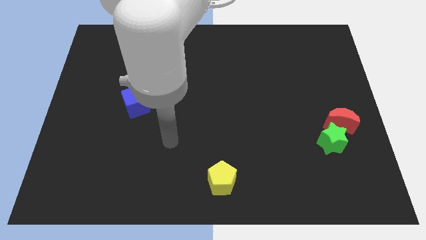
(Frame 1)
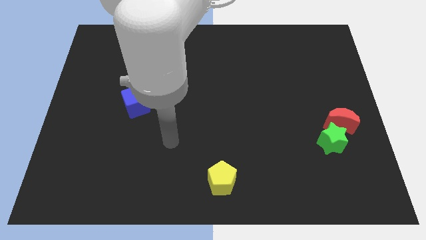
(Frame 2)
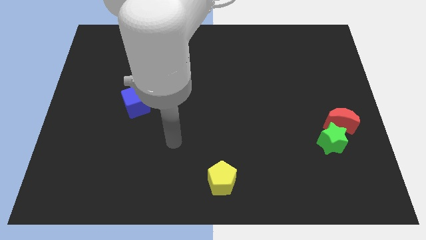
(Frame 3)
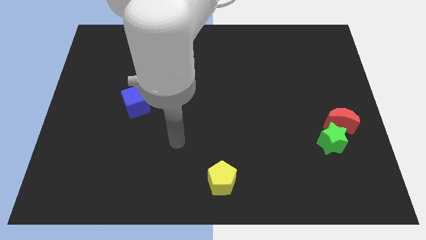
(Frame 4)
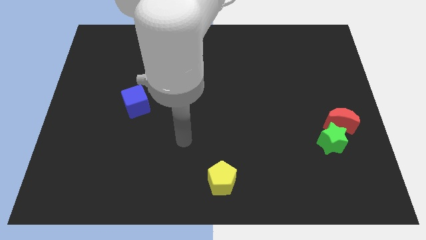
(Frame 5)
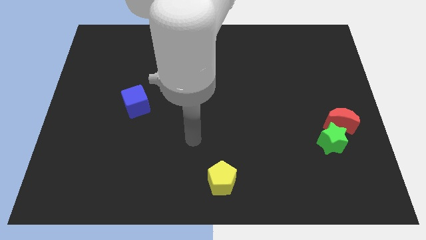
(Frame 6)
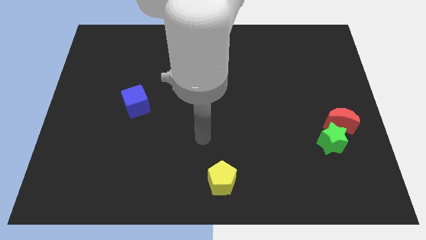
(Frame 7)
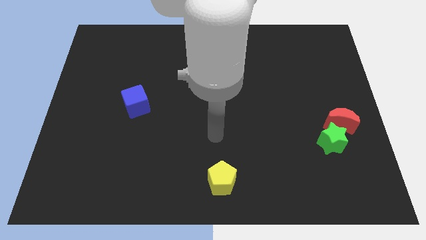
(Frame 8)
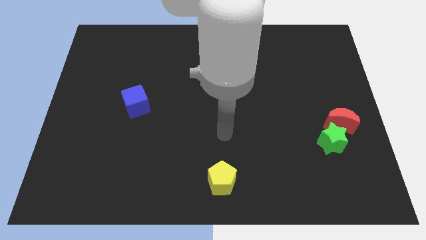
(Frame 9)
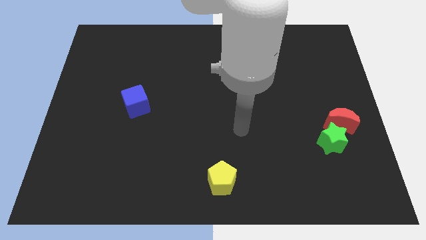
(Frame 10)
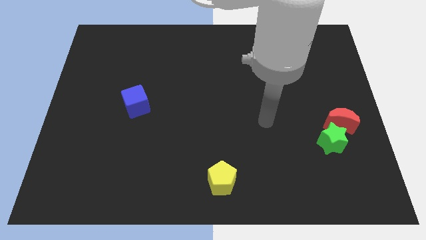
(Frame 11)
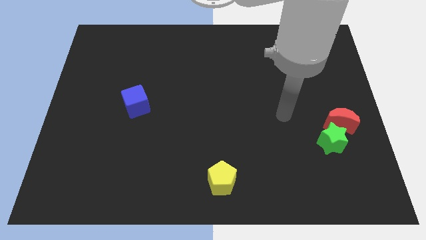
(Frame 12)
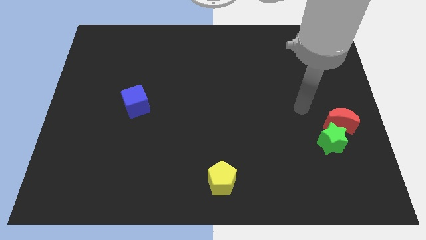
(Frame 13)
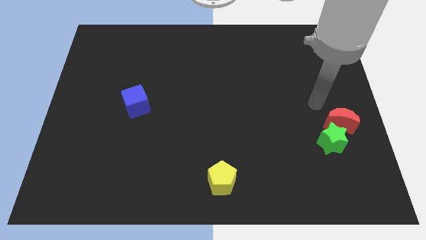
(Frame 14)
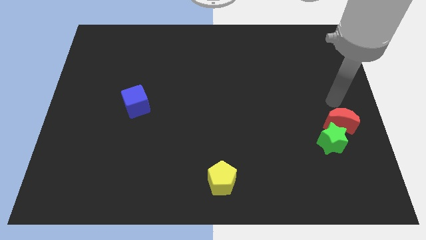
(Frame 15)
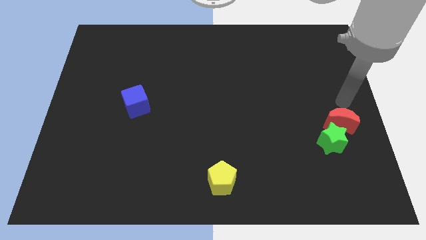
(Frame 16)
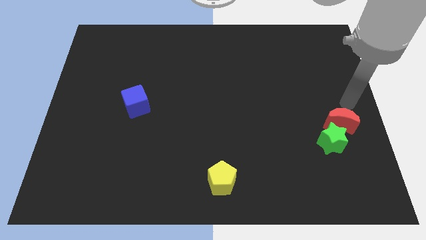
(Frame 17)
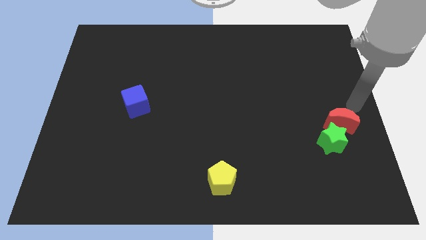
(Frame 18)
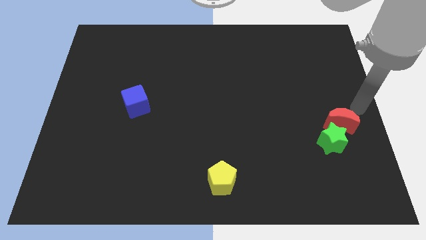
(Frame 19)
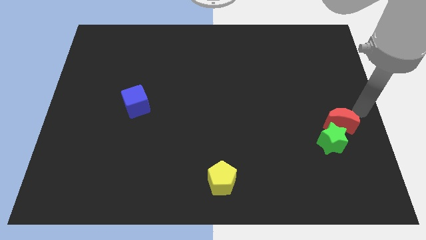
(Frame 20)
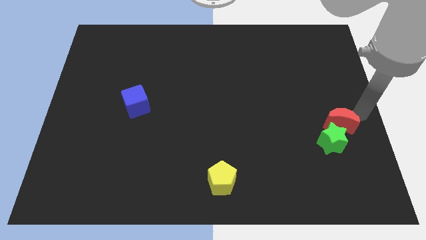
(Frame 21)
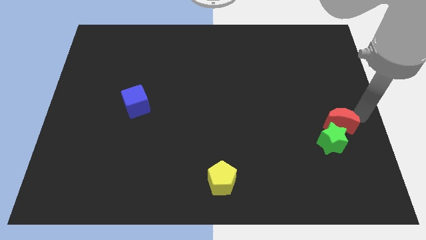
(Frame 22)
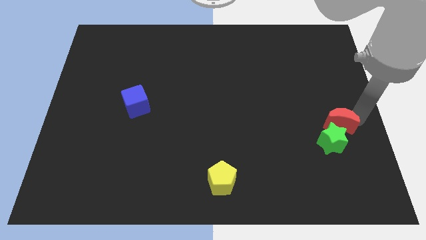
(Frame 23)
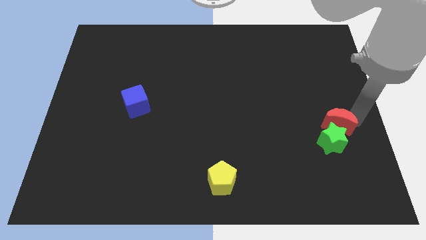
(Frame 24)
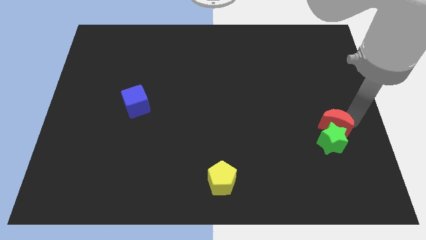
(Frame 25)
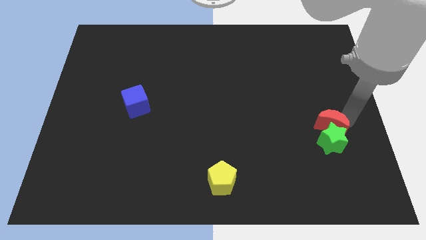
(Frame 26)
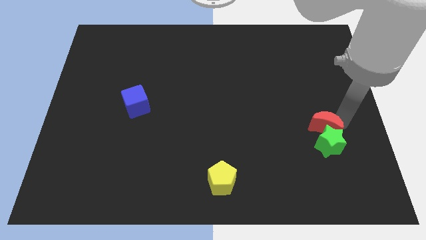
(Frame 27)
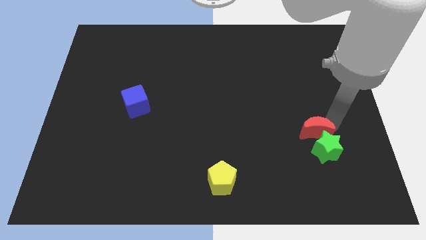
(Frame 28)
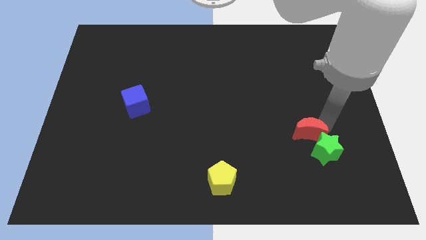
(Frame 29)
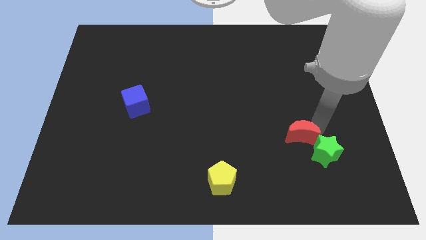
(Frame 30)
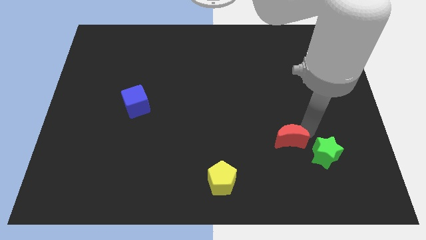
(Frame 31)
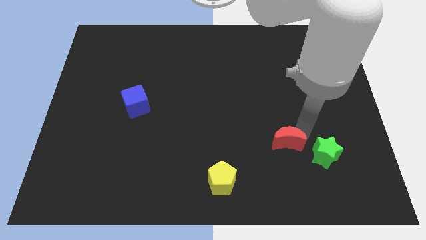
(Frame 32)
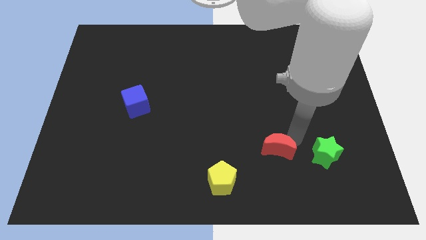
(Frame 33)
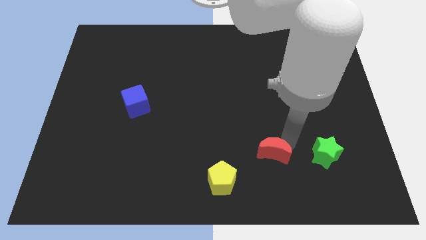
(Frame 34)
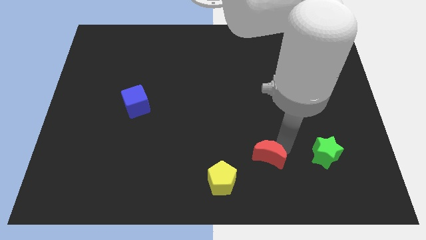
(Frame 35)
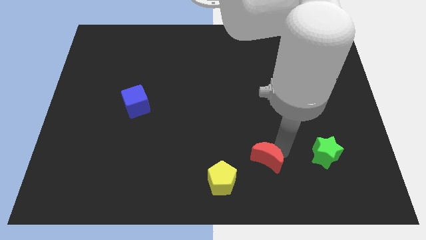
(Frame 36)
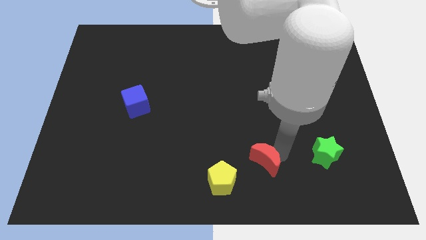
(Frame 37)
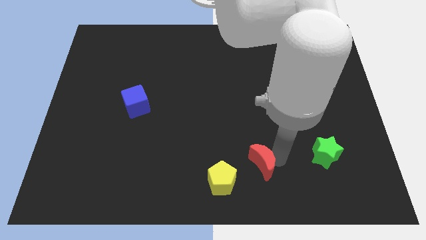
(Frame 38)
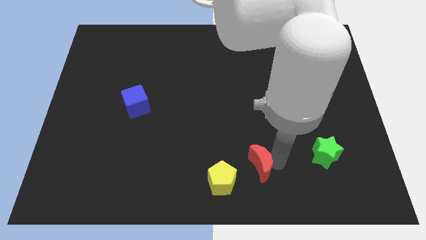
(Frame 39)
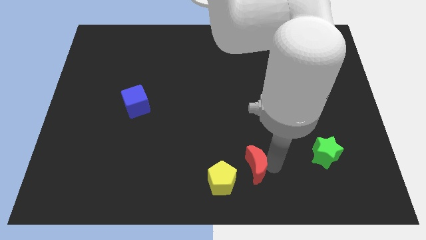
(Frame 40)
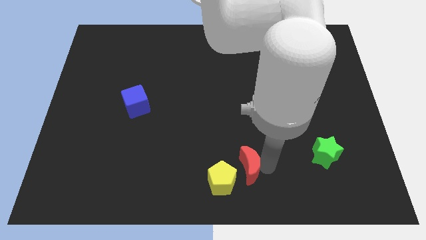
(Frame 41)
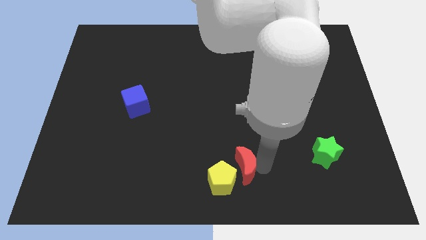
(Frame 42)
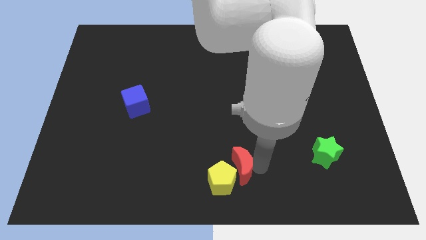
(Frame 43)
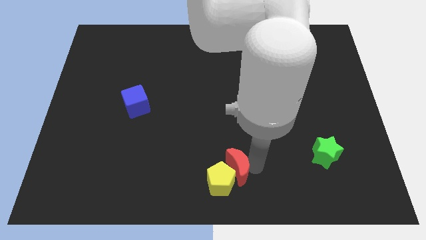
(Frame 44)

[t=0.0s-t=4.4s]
slide the moon next to the yellow block

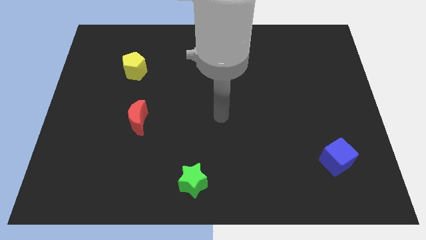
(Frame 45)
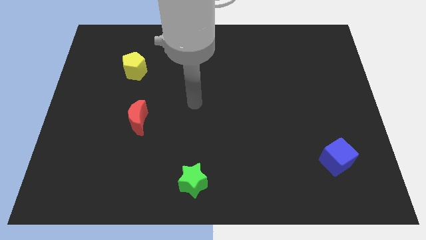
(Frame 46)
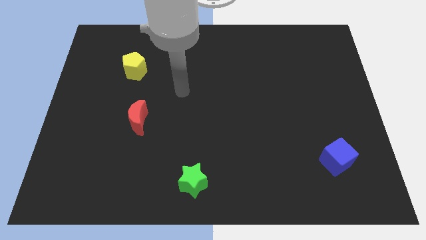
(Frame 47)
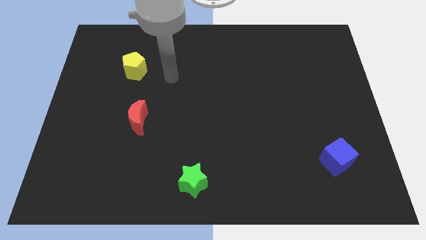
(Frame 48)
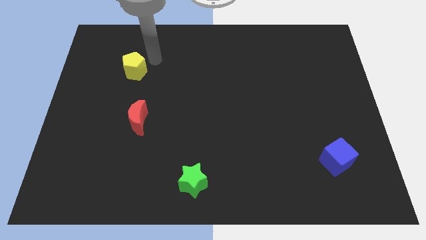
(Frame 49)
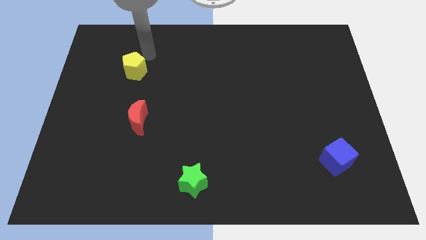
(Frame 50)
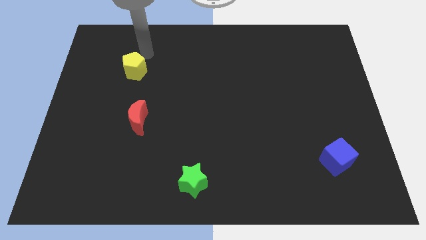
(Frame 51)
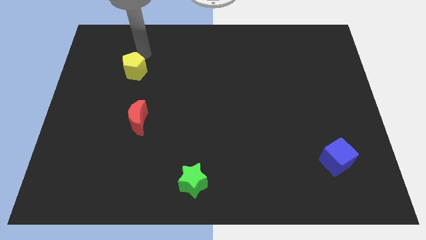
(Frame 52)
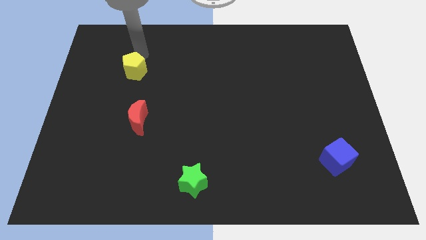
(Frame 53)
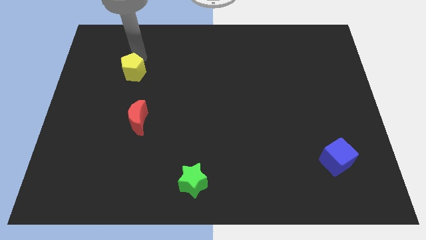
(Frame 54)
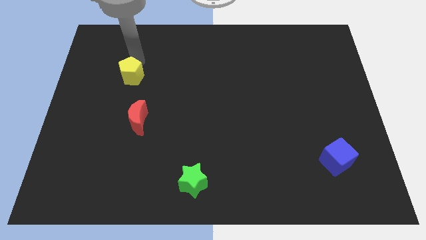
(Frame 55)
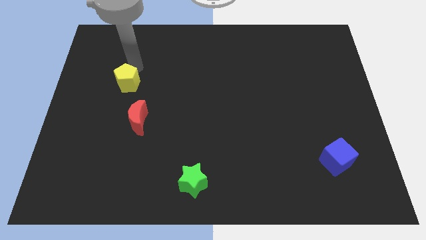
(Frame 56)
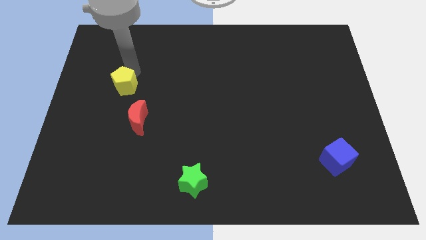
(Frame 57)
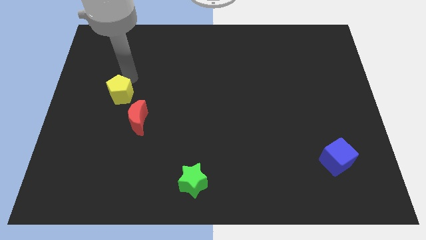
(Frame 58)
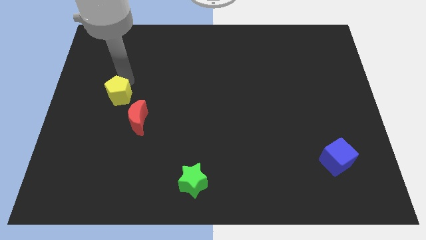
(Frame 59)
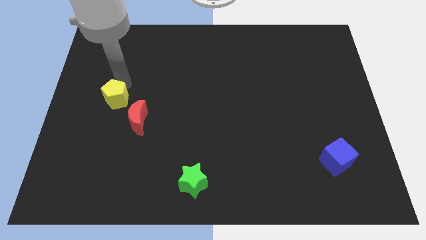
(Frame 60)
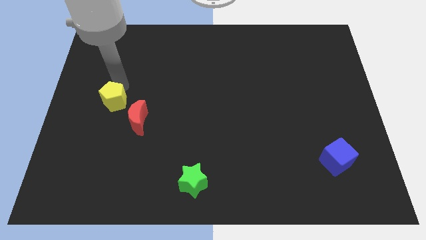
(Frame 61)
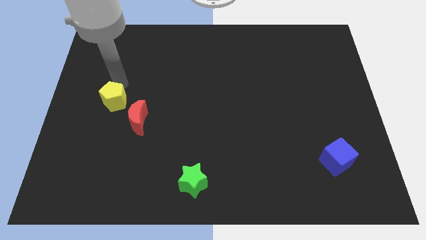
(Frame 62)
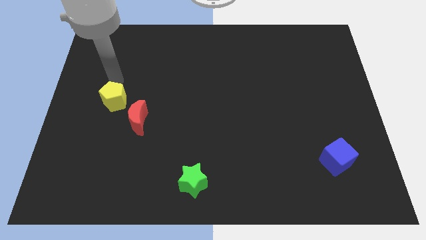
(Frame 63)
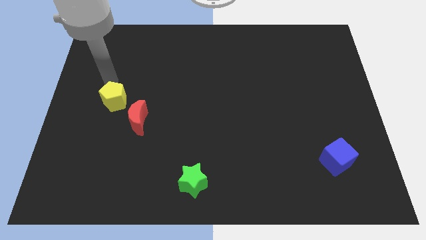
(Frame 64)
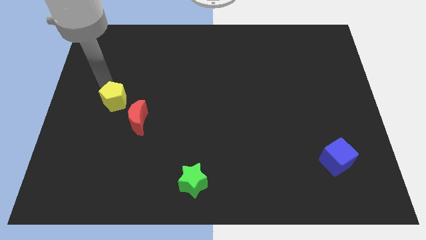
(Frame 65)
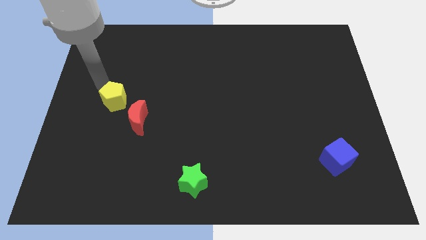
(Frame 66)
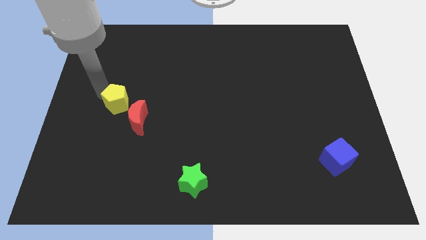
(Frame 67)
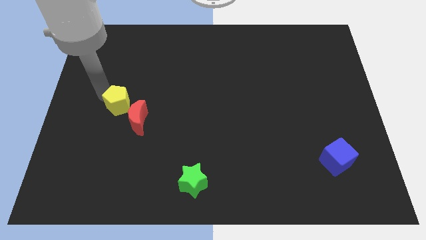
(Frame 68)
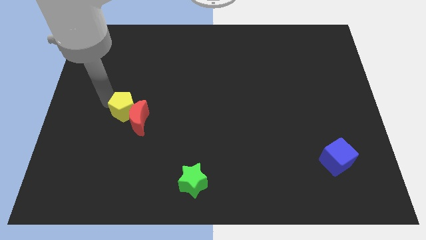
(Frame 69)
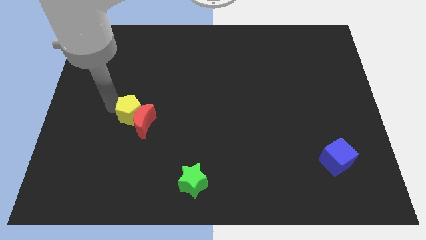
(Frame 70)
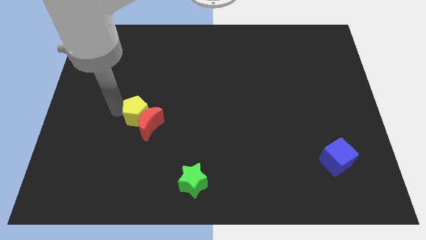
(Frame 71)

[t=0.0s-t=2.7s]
put the yellow pentagon next to the red moon

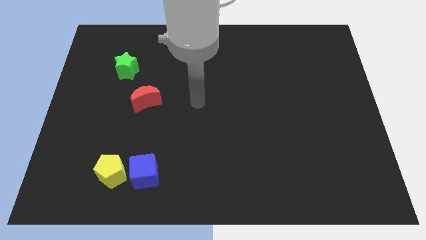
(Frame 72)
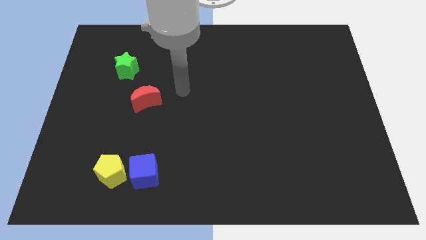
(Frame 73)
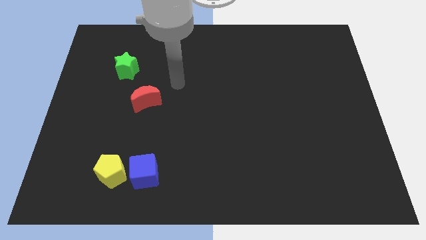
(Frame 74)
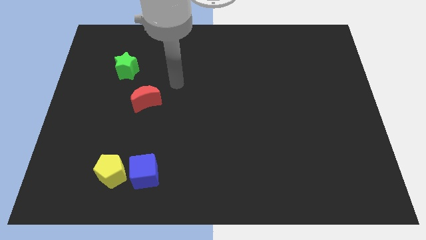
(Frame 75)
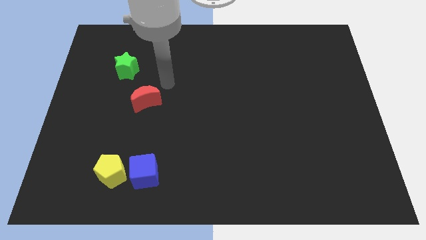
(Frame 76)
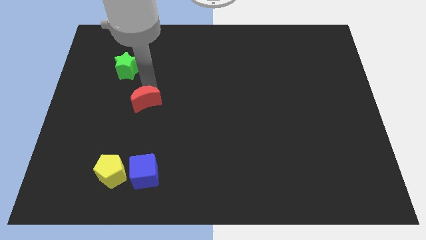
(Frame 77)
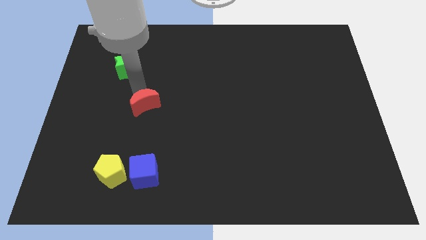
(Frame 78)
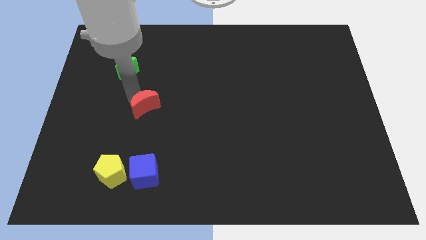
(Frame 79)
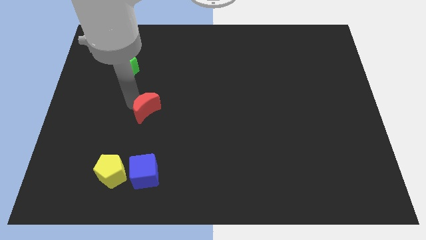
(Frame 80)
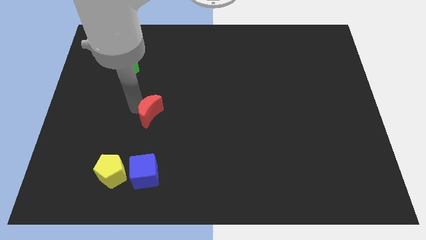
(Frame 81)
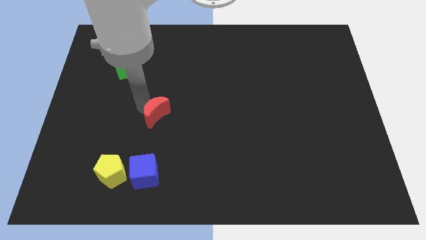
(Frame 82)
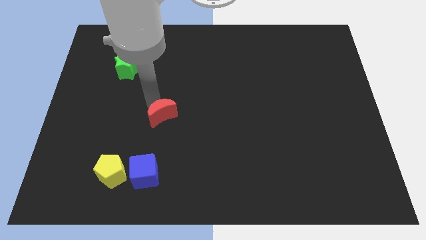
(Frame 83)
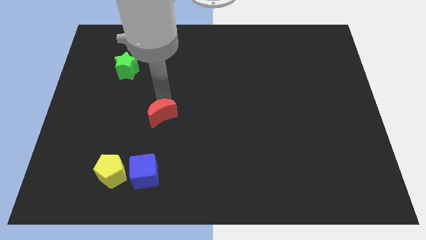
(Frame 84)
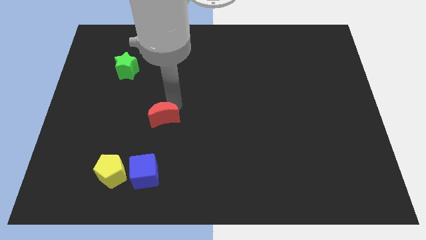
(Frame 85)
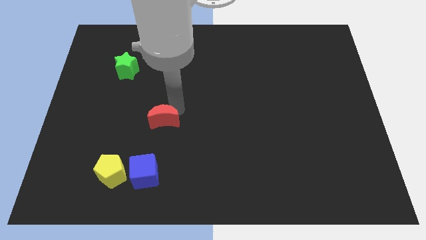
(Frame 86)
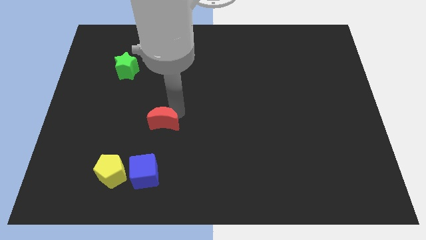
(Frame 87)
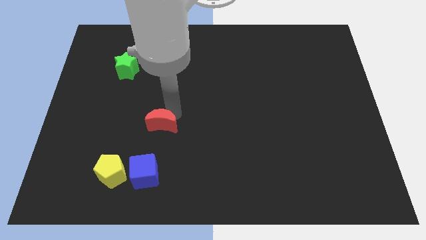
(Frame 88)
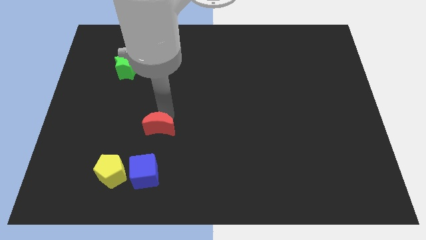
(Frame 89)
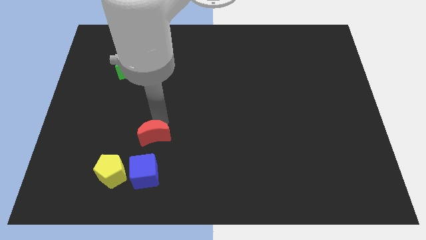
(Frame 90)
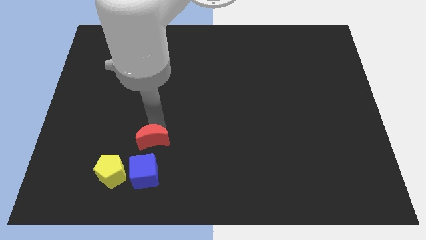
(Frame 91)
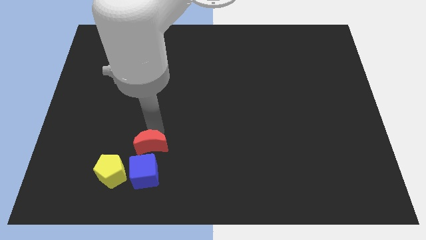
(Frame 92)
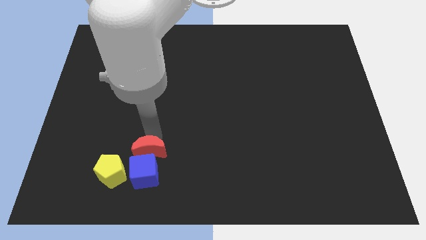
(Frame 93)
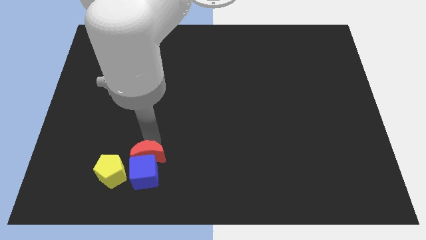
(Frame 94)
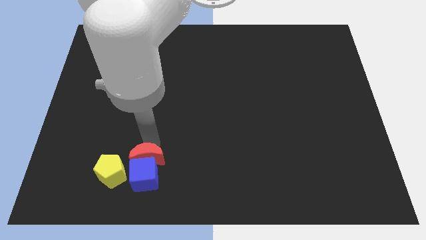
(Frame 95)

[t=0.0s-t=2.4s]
move the red block towards the blue block
